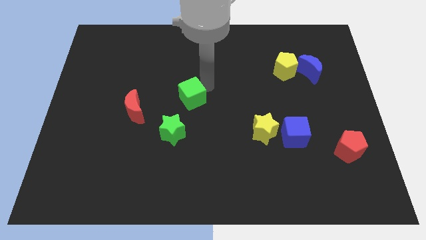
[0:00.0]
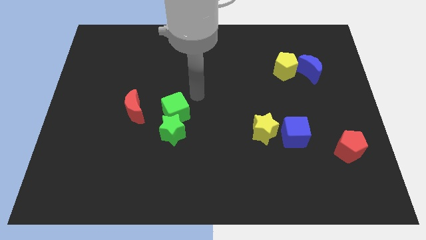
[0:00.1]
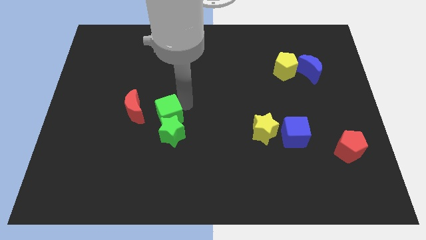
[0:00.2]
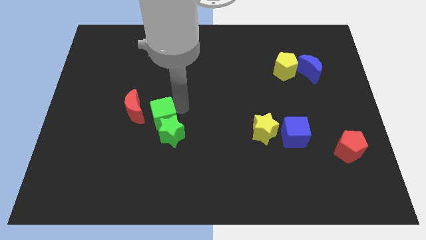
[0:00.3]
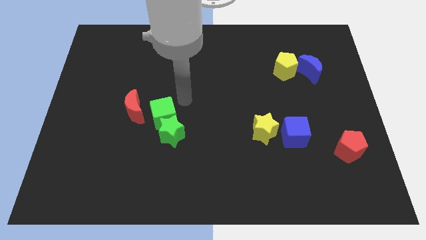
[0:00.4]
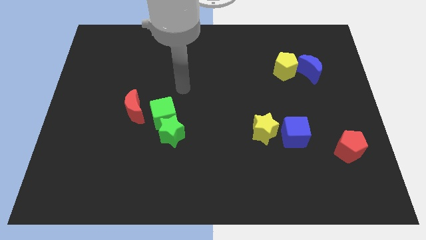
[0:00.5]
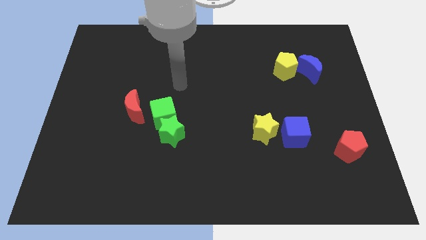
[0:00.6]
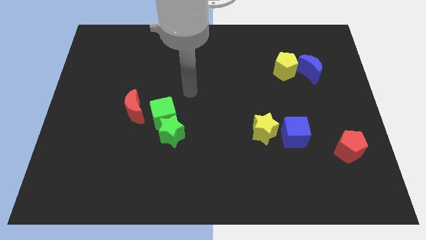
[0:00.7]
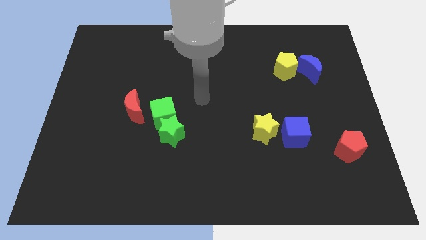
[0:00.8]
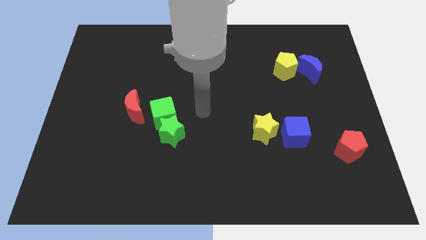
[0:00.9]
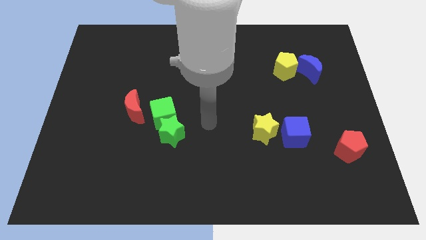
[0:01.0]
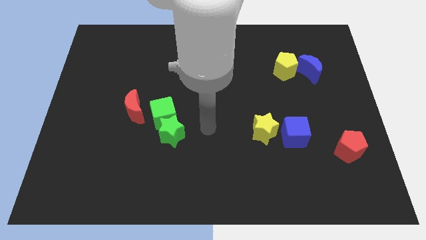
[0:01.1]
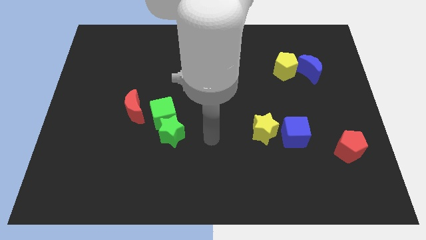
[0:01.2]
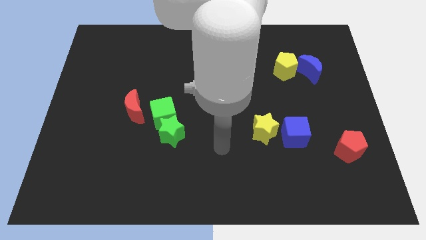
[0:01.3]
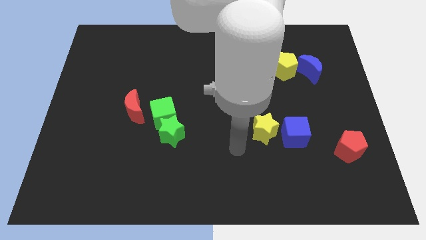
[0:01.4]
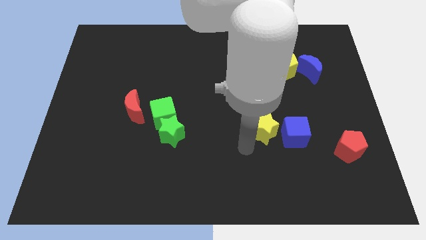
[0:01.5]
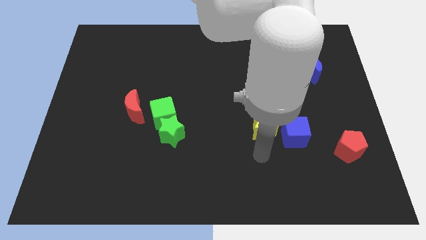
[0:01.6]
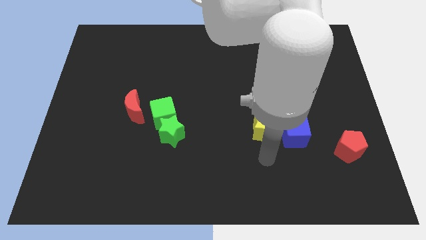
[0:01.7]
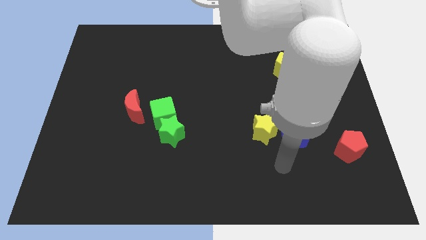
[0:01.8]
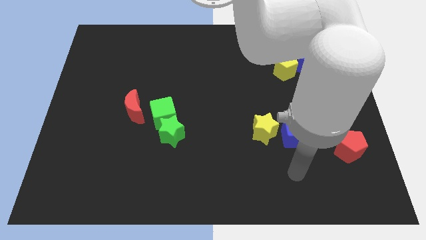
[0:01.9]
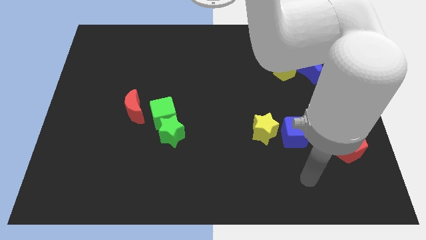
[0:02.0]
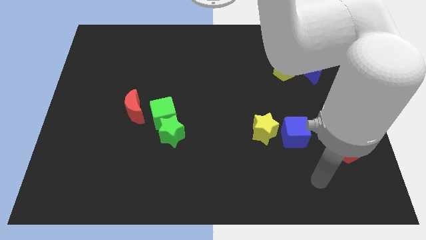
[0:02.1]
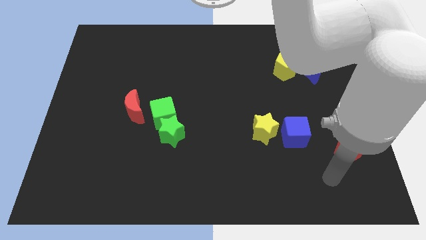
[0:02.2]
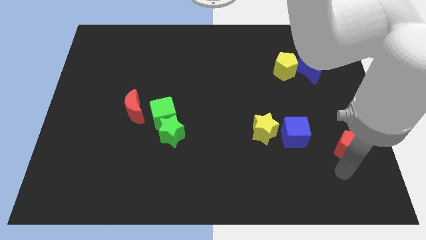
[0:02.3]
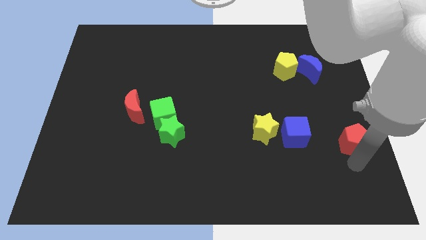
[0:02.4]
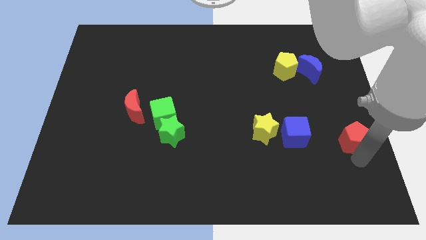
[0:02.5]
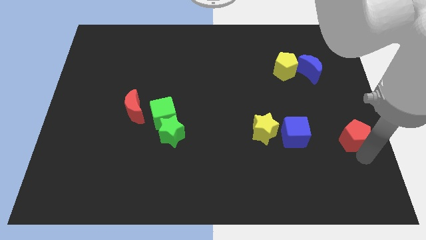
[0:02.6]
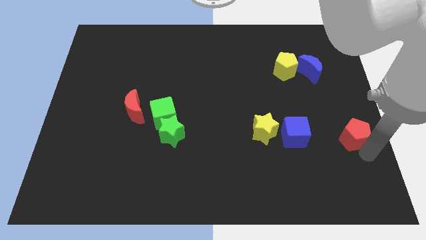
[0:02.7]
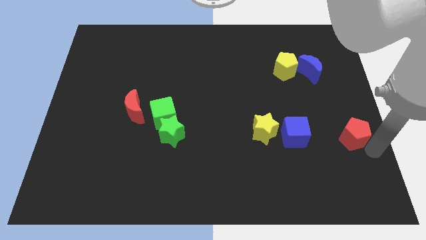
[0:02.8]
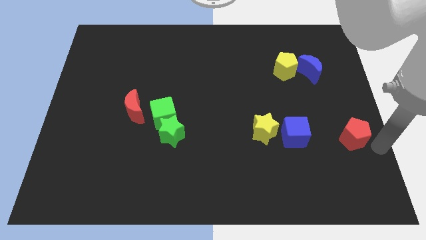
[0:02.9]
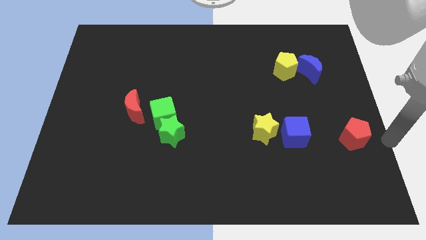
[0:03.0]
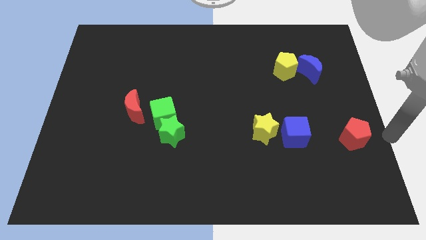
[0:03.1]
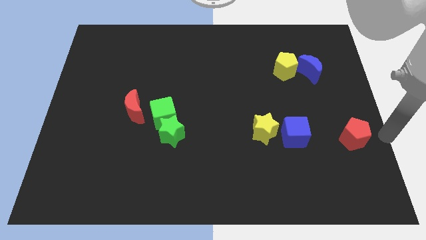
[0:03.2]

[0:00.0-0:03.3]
move green cube into the green star push red pentagon slightly towards upward

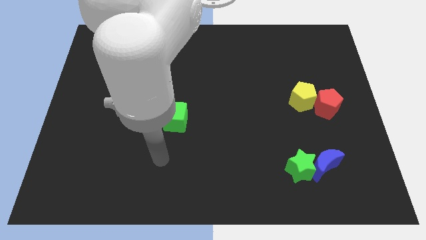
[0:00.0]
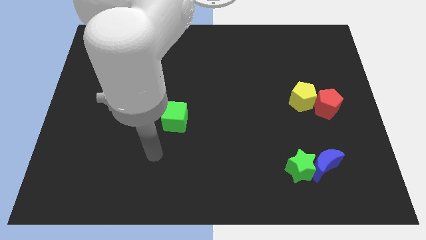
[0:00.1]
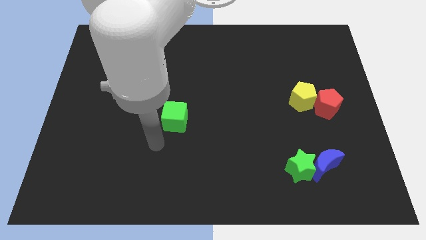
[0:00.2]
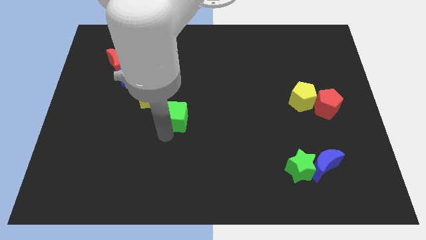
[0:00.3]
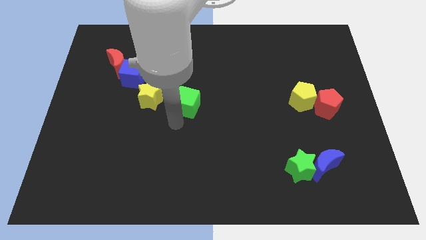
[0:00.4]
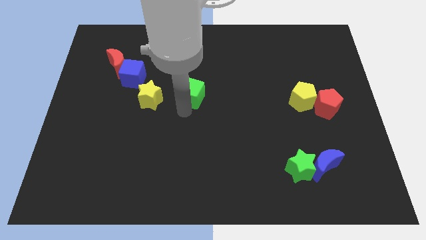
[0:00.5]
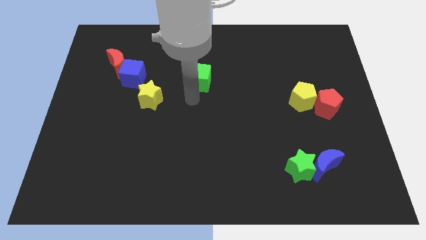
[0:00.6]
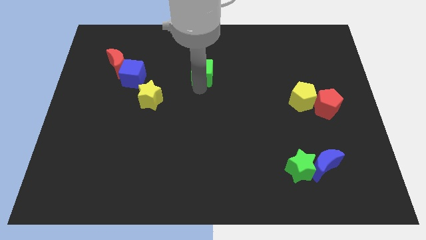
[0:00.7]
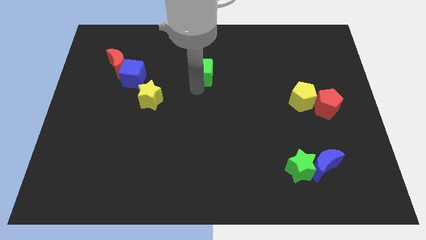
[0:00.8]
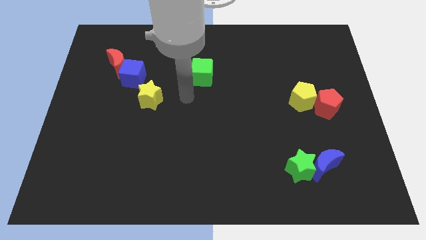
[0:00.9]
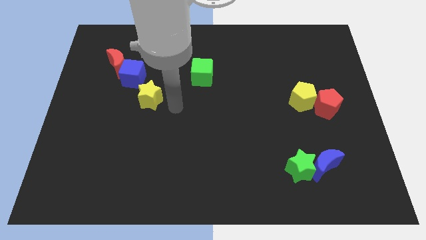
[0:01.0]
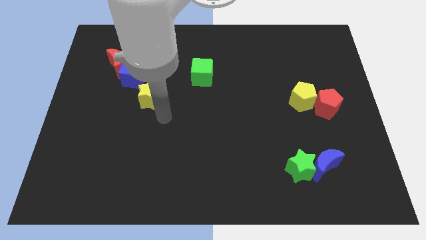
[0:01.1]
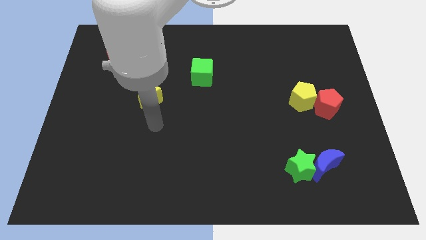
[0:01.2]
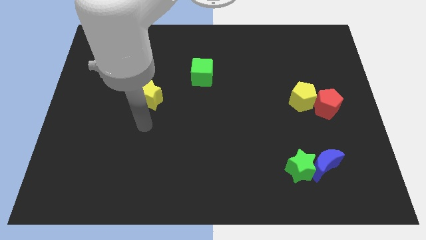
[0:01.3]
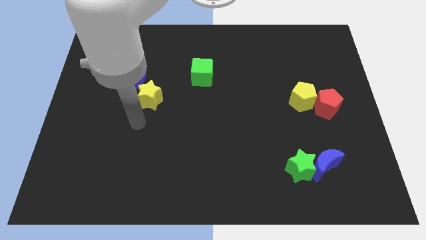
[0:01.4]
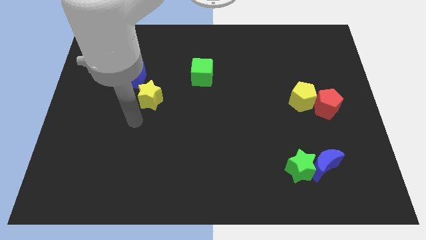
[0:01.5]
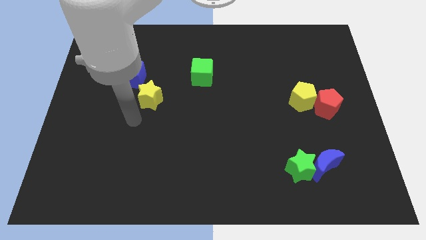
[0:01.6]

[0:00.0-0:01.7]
push the green cube towards the top side

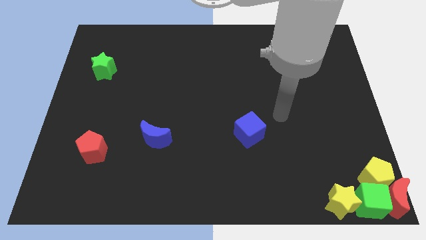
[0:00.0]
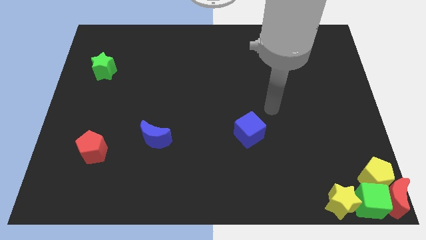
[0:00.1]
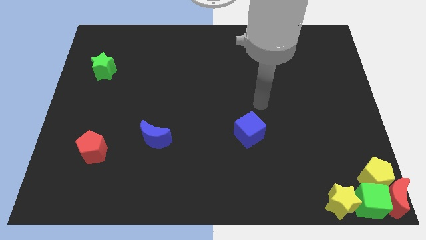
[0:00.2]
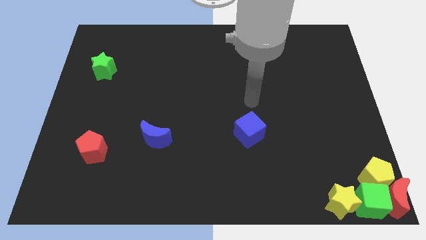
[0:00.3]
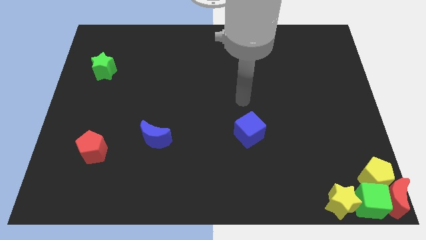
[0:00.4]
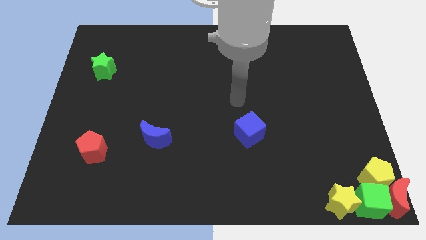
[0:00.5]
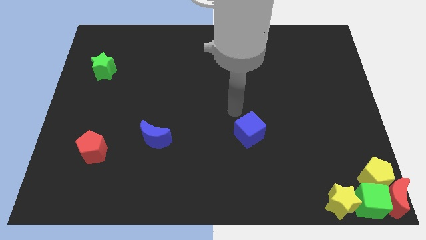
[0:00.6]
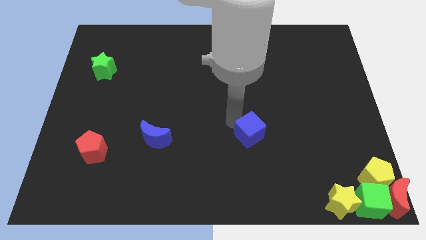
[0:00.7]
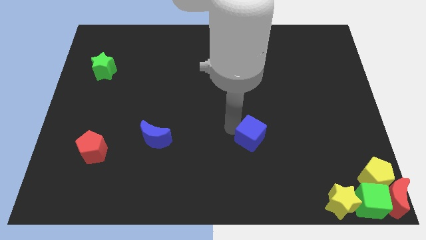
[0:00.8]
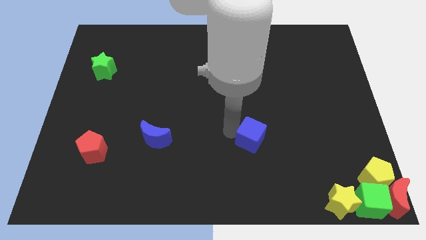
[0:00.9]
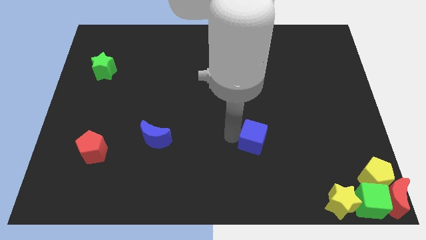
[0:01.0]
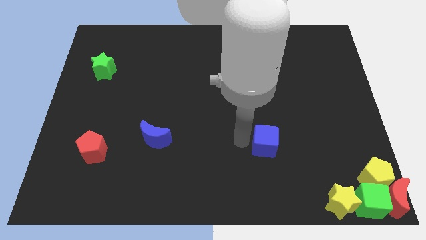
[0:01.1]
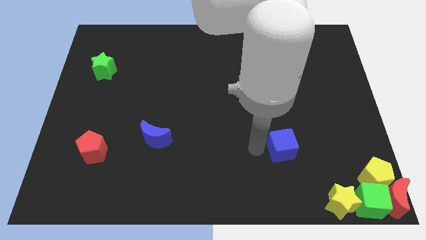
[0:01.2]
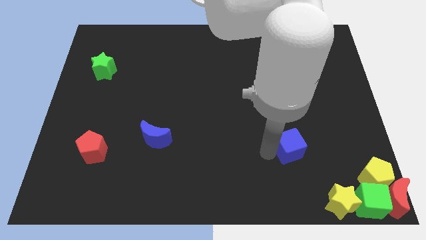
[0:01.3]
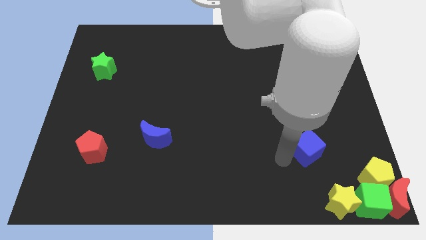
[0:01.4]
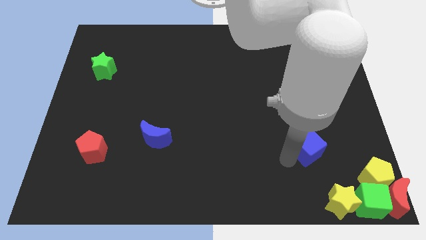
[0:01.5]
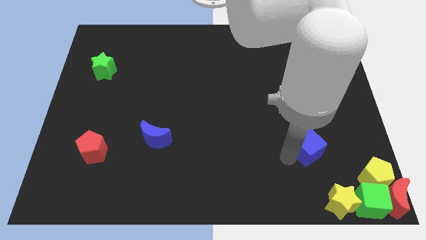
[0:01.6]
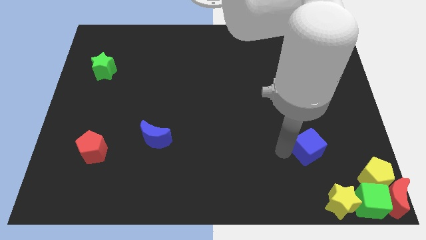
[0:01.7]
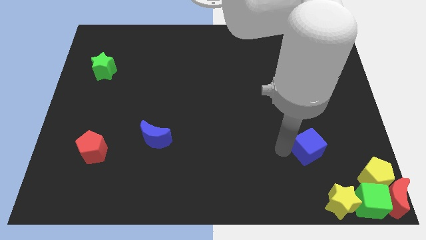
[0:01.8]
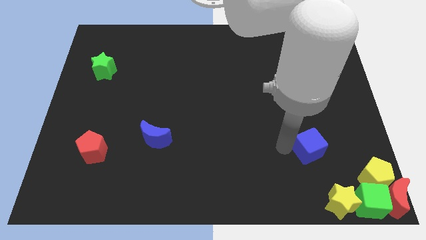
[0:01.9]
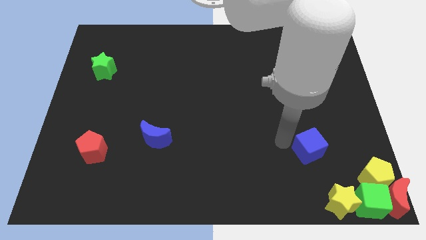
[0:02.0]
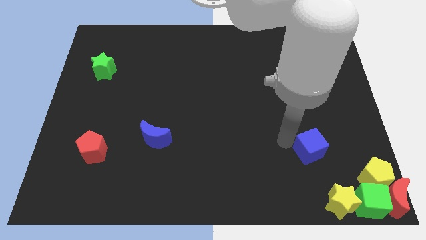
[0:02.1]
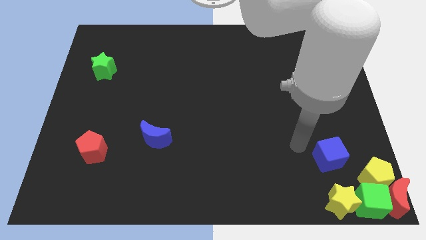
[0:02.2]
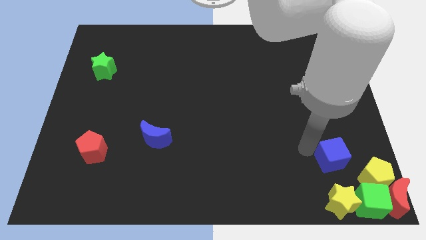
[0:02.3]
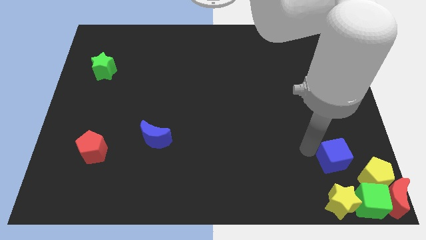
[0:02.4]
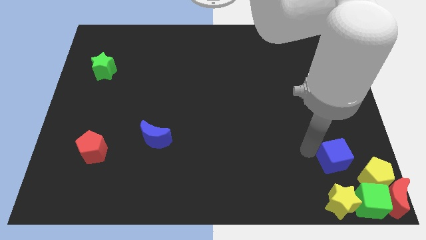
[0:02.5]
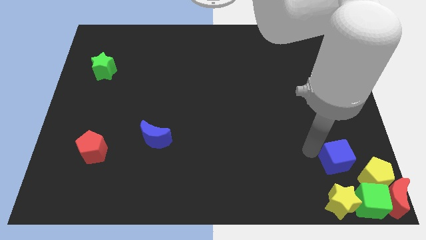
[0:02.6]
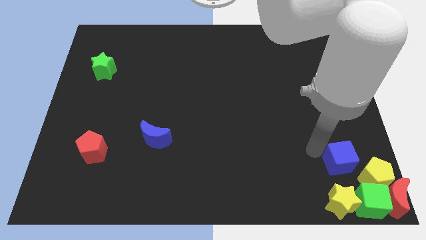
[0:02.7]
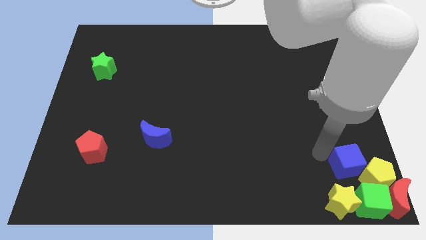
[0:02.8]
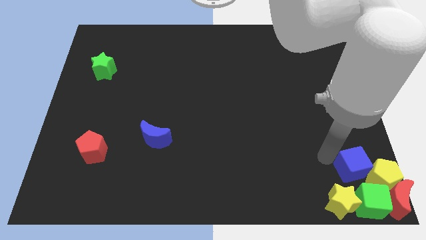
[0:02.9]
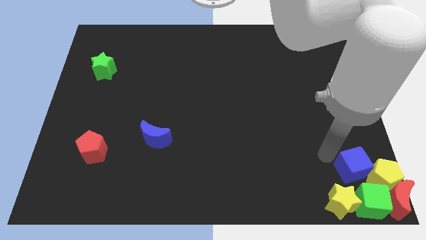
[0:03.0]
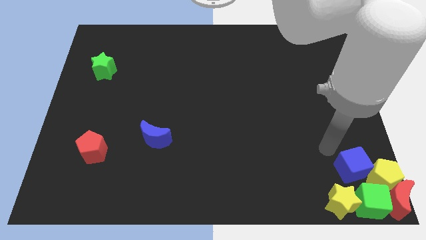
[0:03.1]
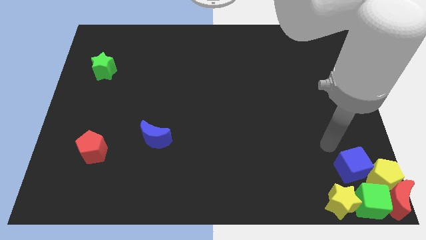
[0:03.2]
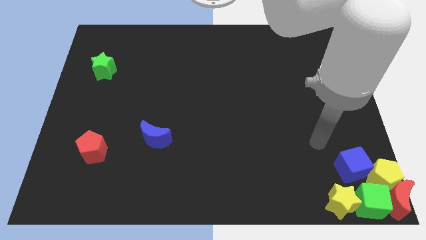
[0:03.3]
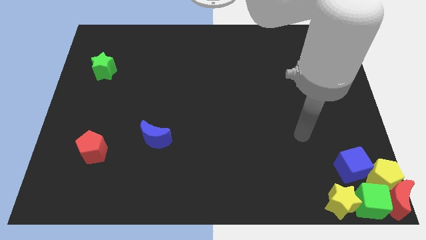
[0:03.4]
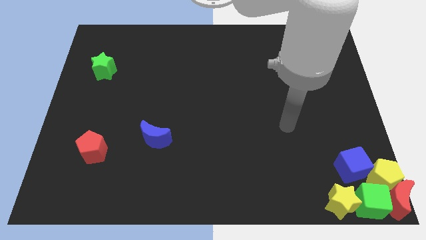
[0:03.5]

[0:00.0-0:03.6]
push the blue cube into the group of blocks

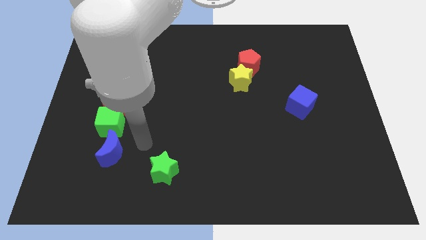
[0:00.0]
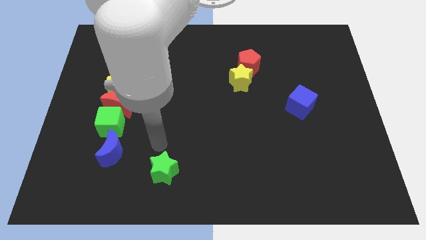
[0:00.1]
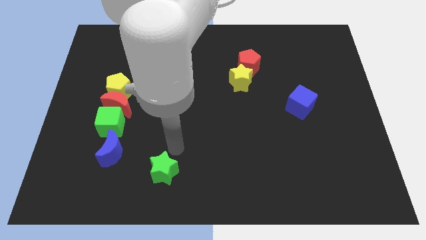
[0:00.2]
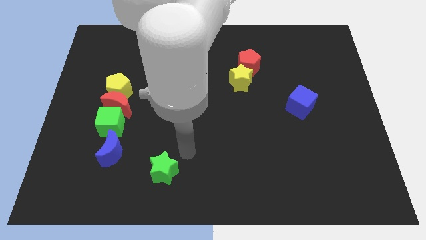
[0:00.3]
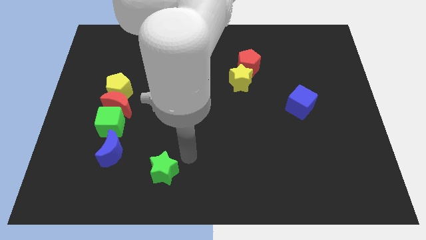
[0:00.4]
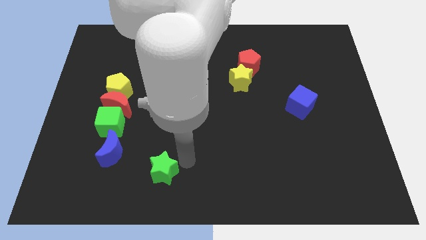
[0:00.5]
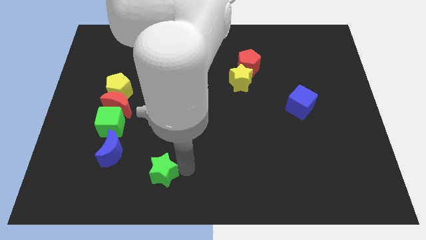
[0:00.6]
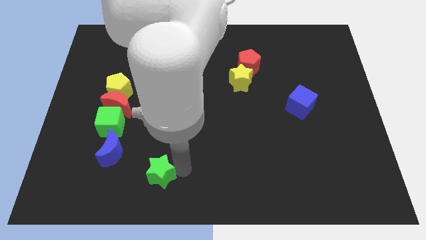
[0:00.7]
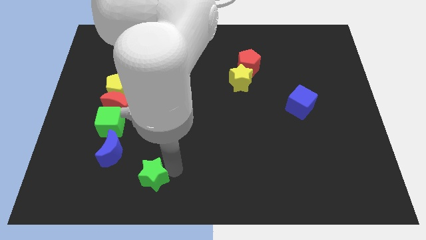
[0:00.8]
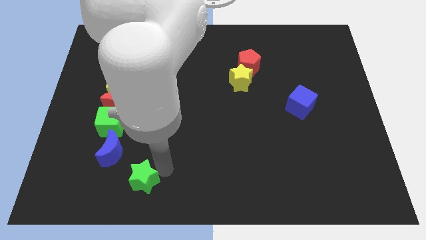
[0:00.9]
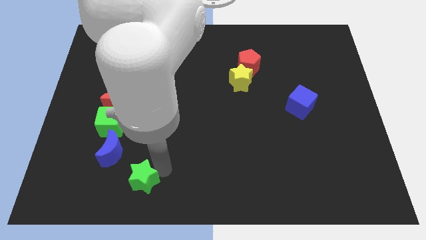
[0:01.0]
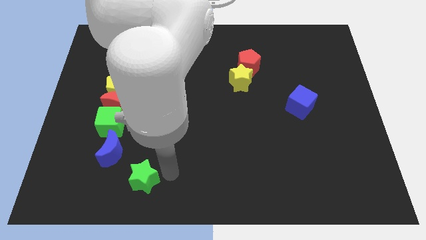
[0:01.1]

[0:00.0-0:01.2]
push the green star towards left
